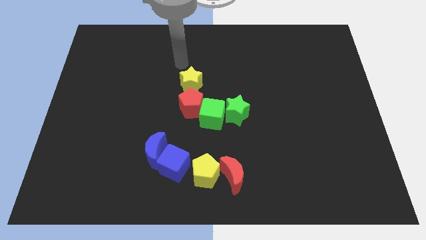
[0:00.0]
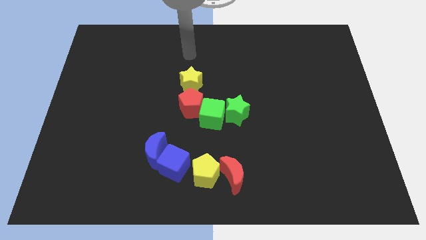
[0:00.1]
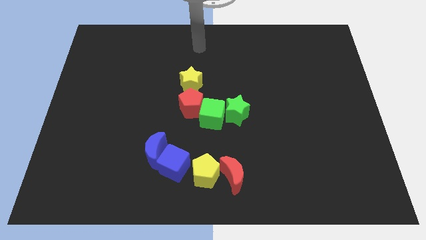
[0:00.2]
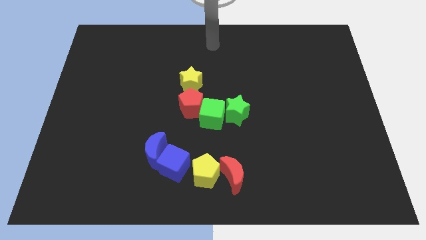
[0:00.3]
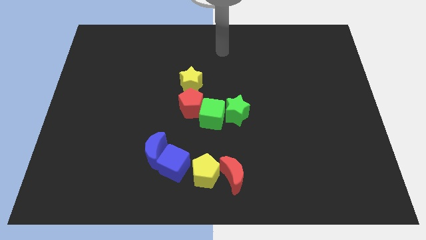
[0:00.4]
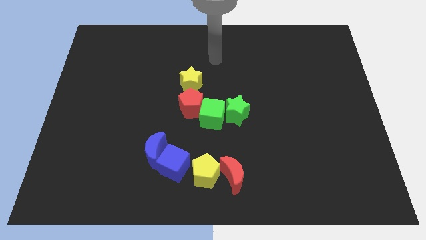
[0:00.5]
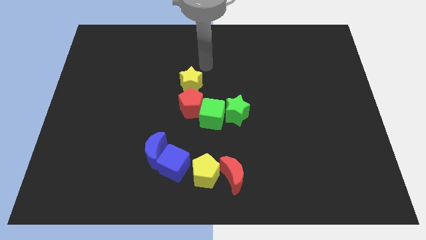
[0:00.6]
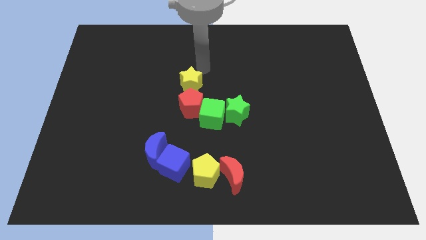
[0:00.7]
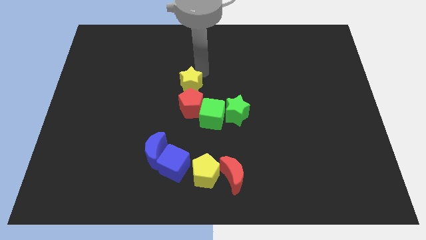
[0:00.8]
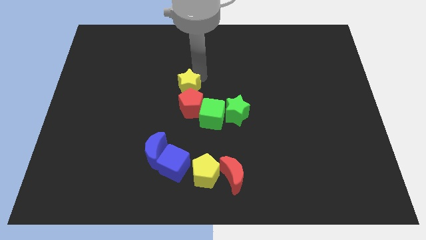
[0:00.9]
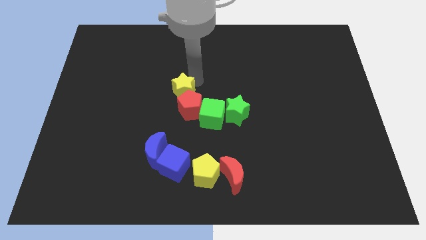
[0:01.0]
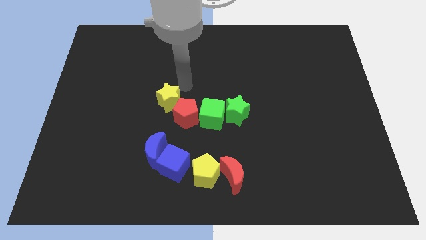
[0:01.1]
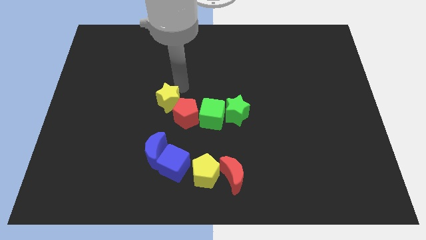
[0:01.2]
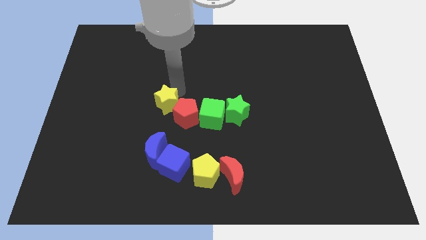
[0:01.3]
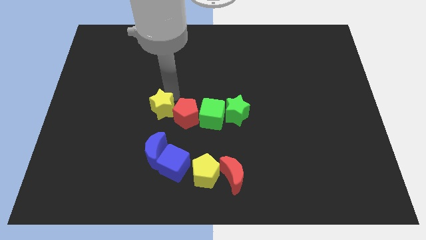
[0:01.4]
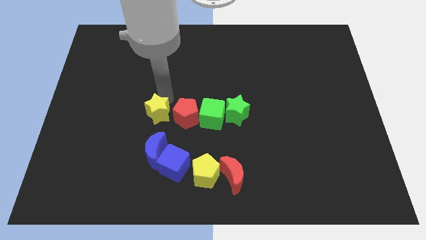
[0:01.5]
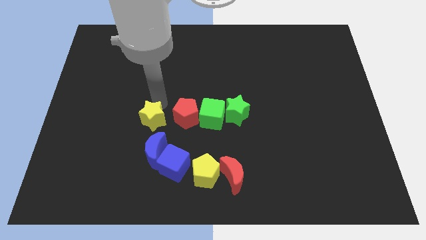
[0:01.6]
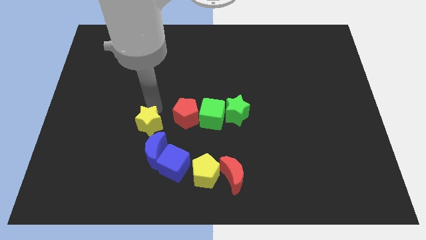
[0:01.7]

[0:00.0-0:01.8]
separate the yellow star from the red pentagon

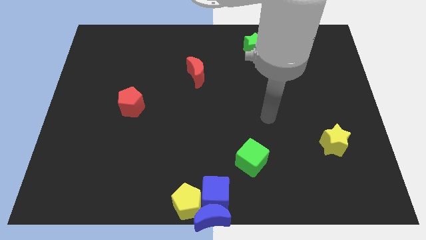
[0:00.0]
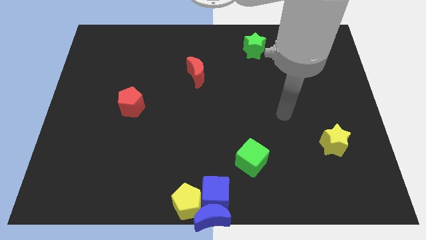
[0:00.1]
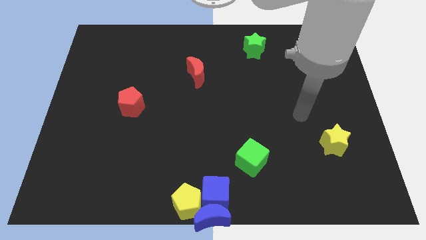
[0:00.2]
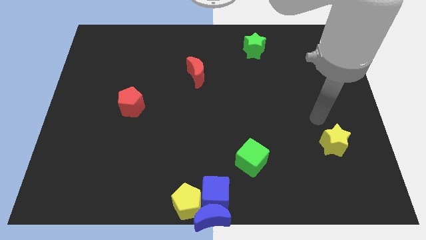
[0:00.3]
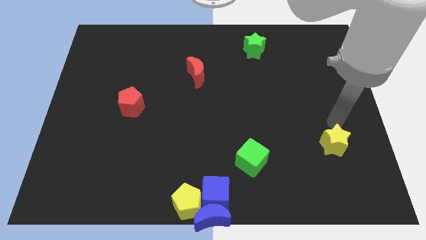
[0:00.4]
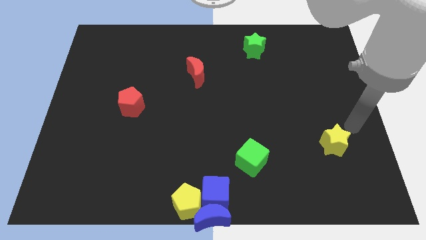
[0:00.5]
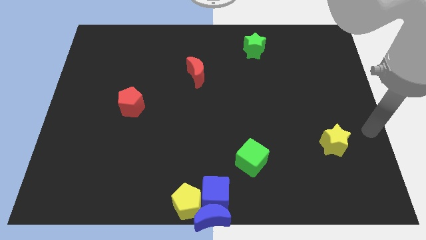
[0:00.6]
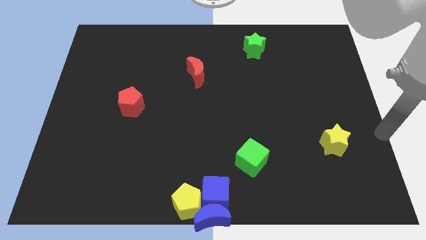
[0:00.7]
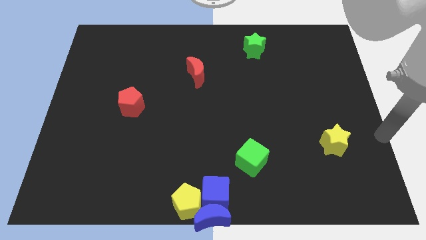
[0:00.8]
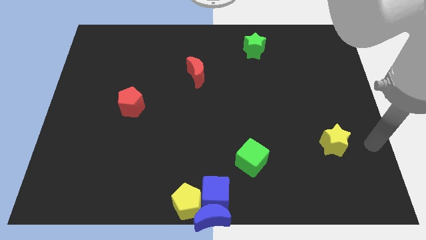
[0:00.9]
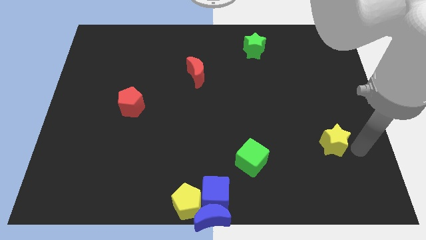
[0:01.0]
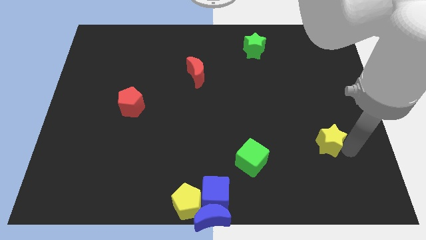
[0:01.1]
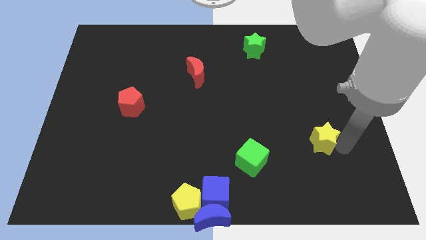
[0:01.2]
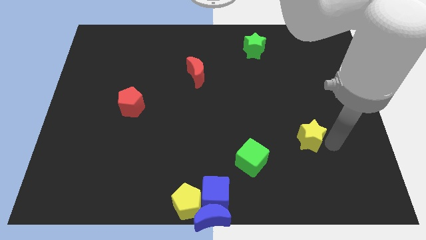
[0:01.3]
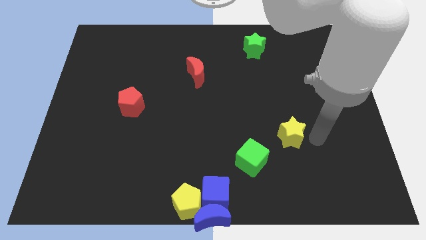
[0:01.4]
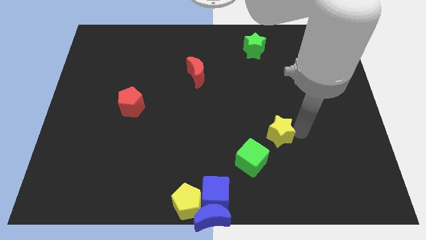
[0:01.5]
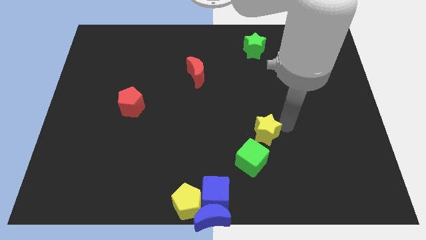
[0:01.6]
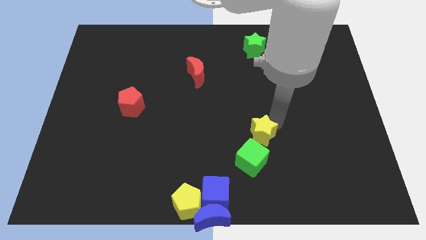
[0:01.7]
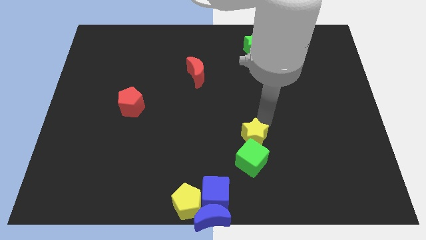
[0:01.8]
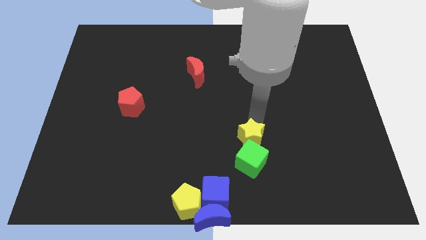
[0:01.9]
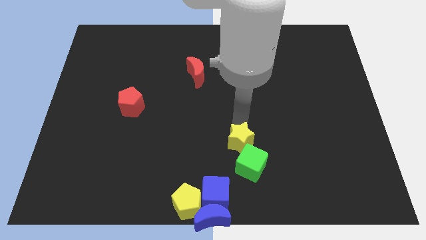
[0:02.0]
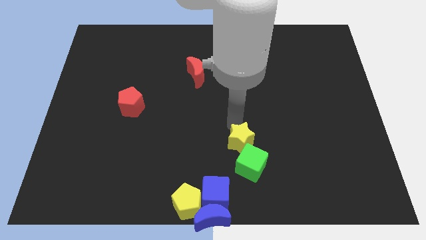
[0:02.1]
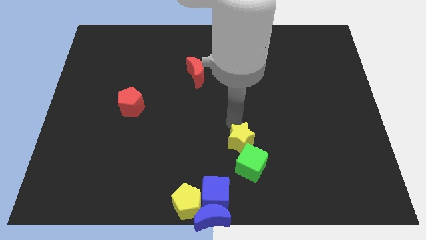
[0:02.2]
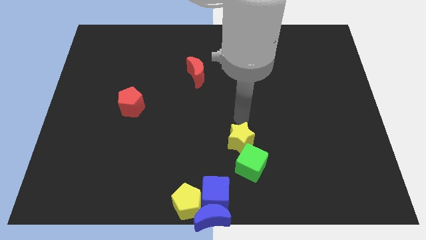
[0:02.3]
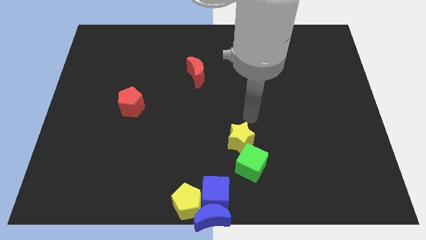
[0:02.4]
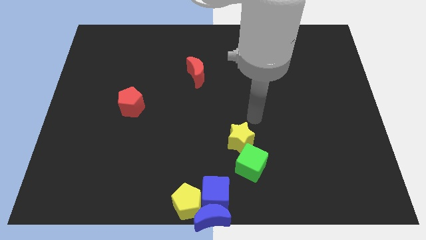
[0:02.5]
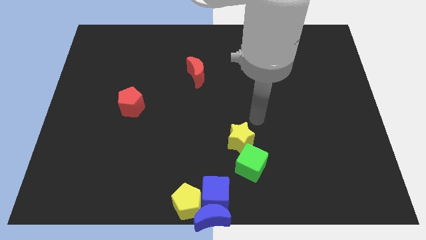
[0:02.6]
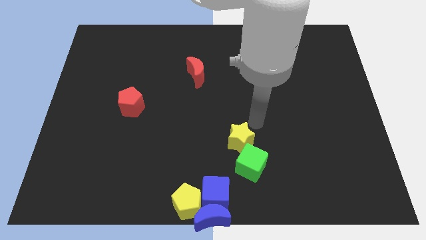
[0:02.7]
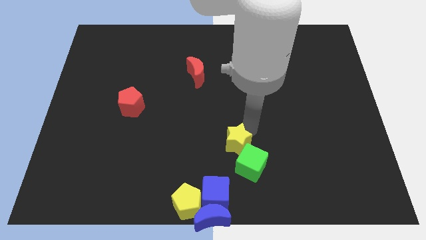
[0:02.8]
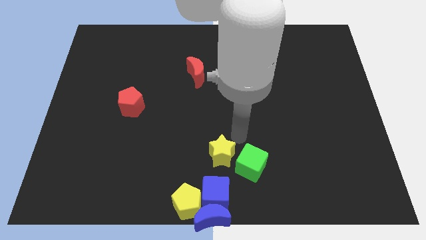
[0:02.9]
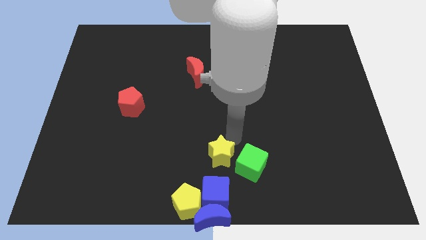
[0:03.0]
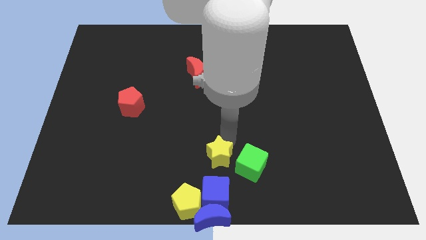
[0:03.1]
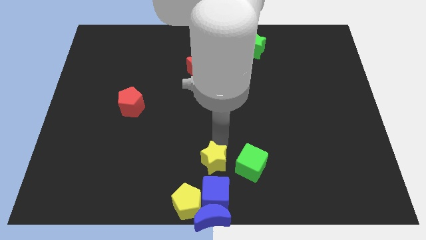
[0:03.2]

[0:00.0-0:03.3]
place the yellow star above the blue cube

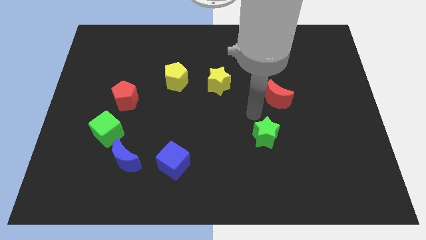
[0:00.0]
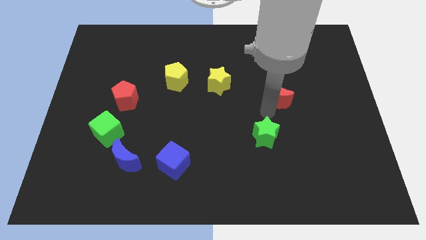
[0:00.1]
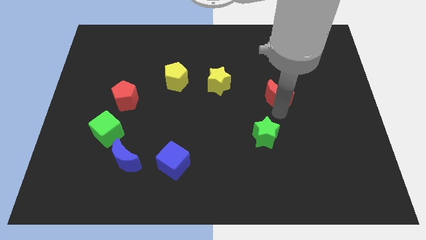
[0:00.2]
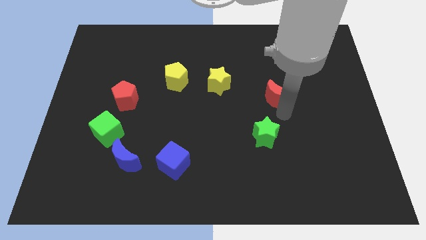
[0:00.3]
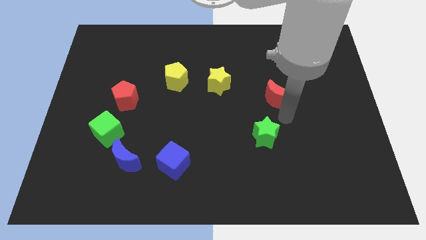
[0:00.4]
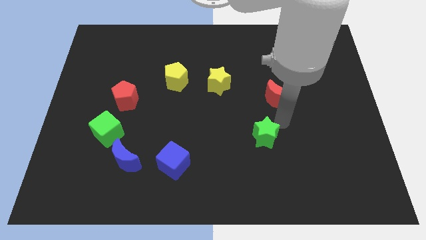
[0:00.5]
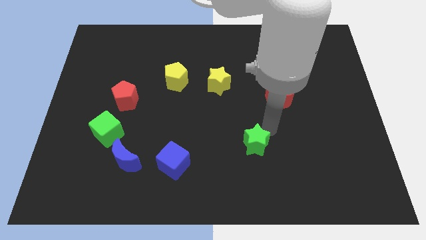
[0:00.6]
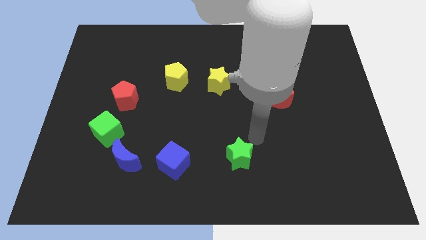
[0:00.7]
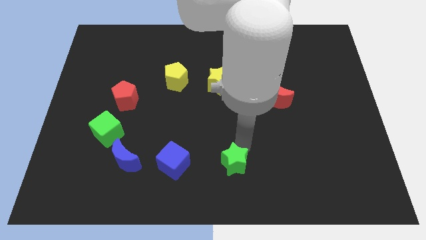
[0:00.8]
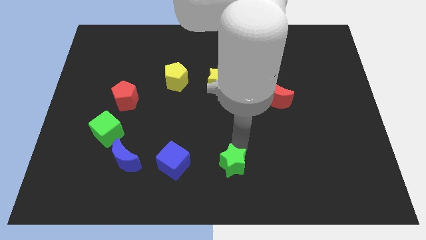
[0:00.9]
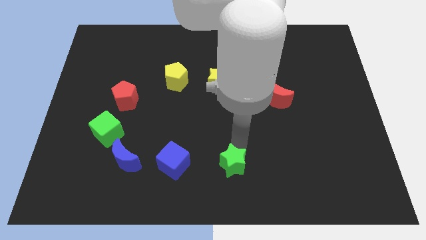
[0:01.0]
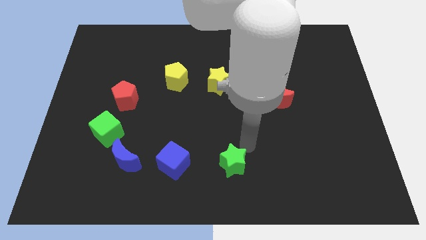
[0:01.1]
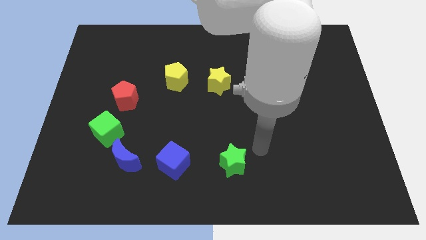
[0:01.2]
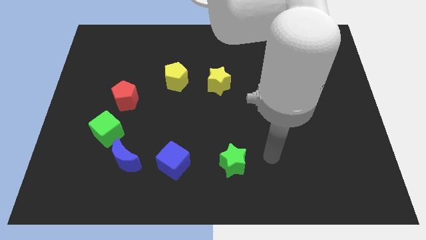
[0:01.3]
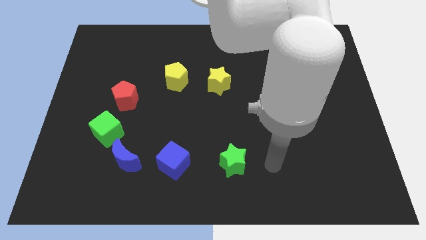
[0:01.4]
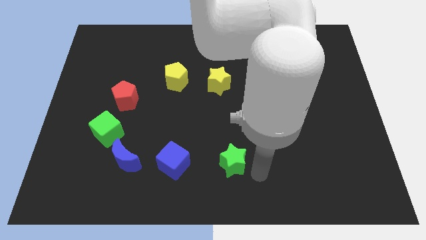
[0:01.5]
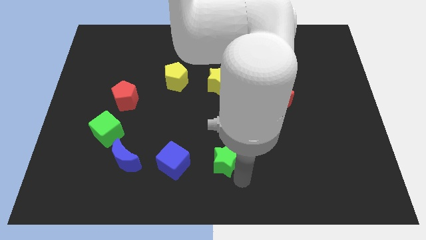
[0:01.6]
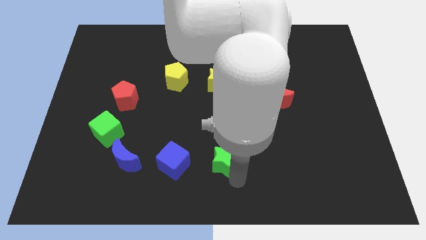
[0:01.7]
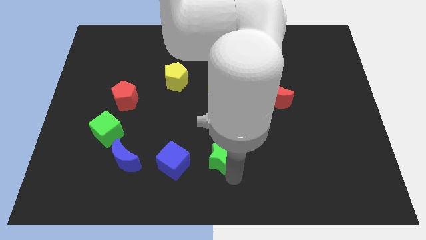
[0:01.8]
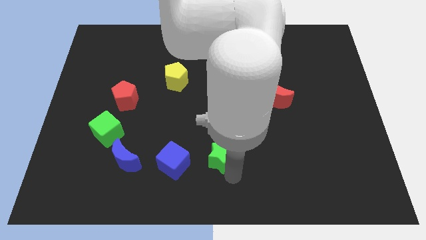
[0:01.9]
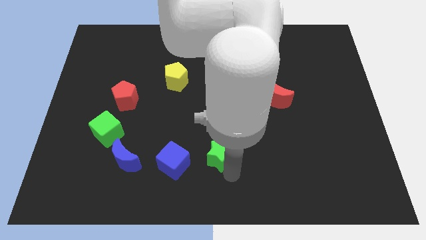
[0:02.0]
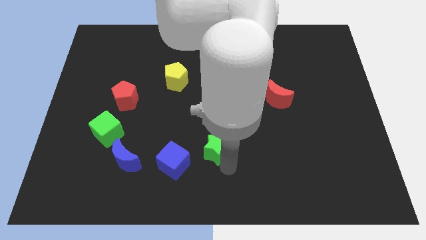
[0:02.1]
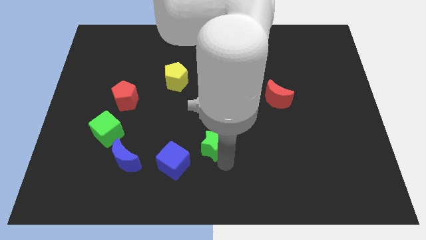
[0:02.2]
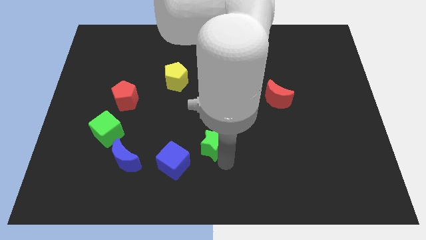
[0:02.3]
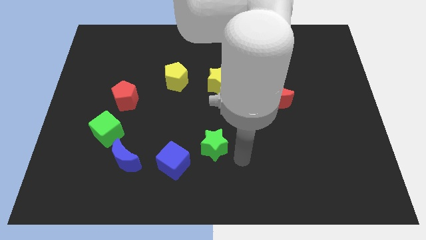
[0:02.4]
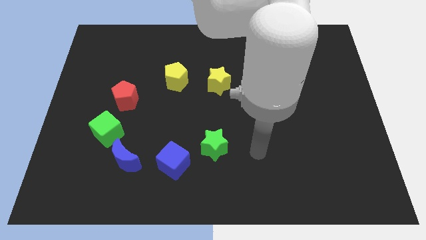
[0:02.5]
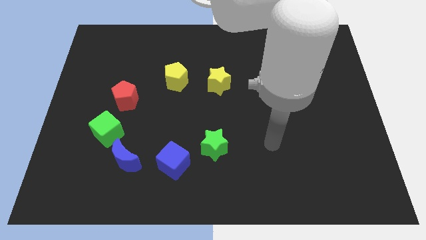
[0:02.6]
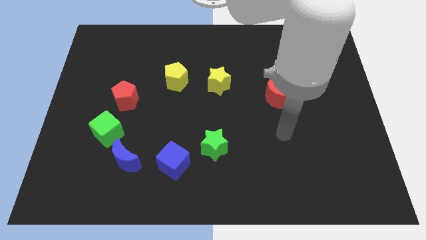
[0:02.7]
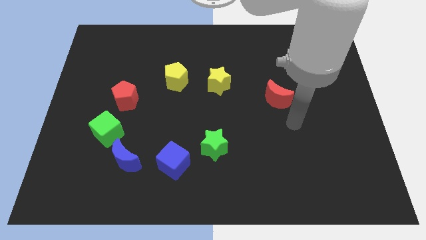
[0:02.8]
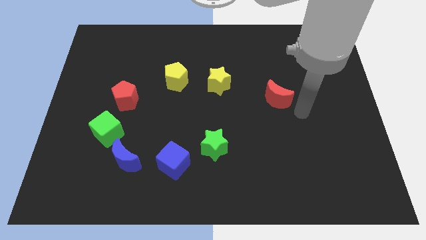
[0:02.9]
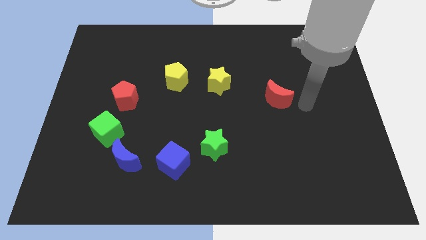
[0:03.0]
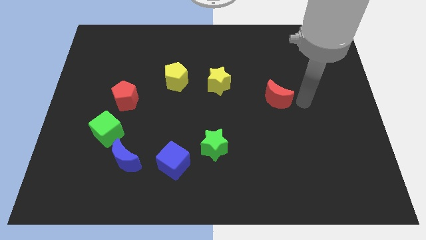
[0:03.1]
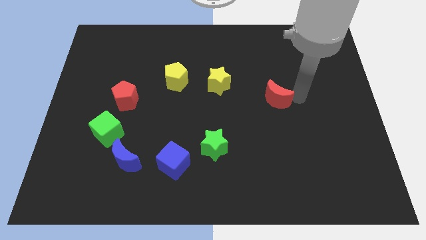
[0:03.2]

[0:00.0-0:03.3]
move the green star slightly towards top of the right of the blue cube

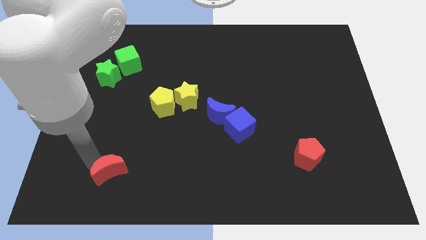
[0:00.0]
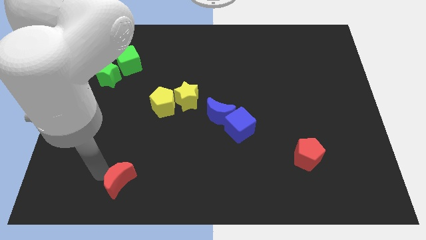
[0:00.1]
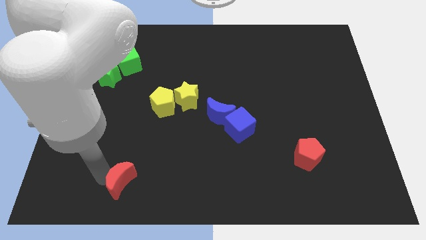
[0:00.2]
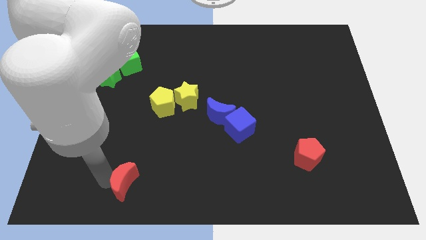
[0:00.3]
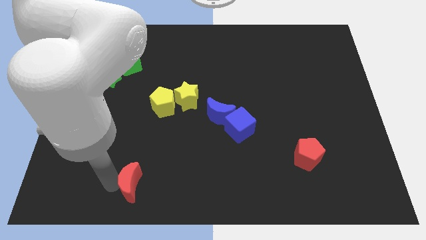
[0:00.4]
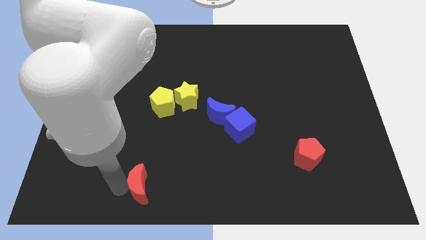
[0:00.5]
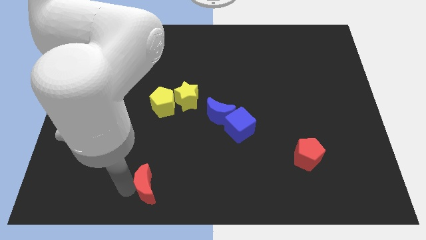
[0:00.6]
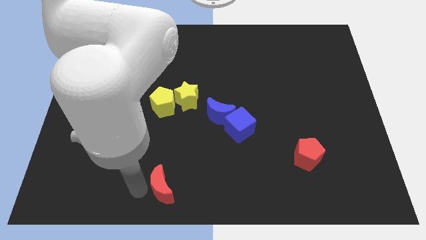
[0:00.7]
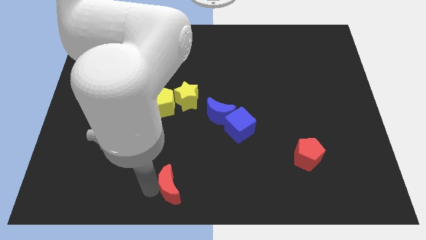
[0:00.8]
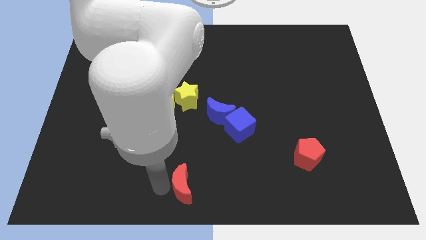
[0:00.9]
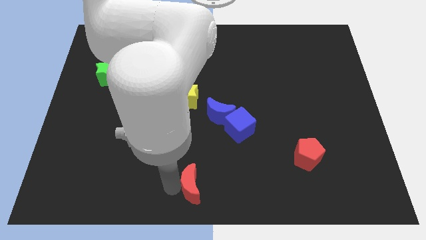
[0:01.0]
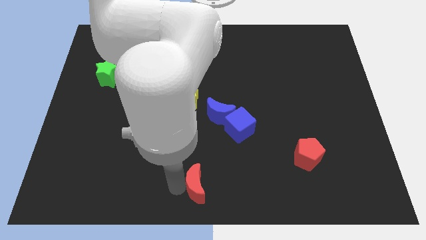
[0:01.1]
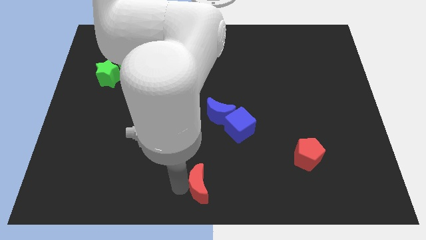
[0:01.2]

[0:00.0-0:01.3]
push the red crescent to the bottom center of the board
